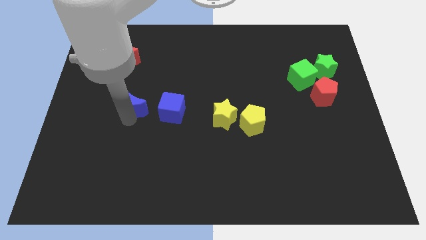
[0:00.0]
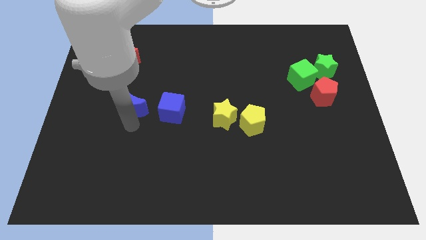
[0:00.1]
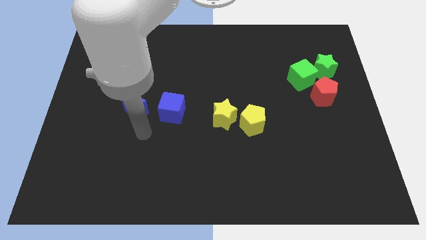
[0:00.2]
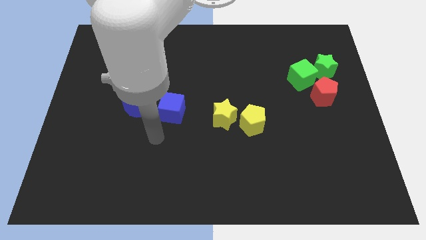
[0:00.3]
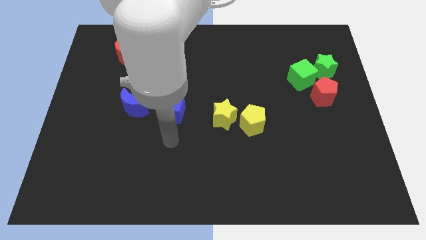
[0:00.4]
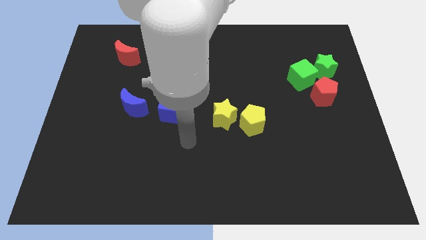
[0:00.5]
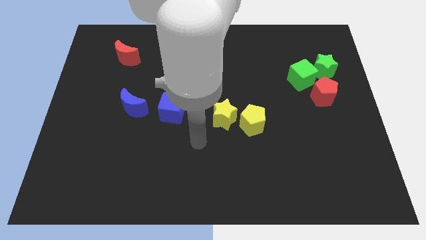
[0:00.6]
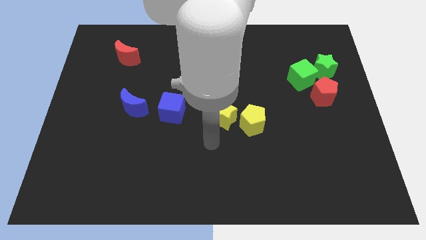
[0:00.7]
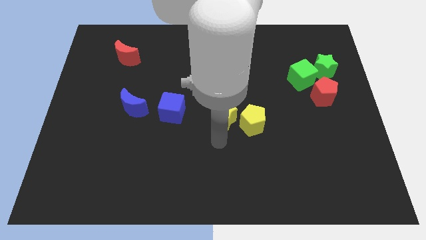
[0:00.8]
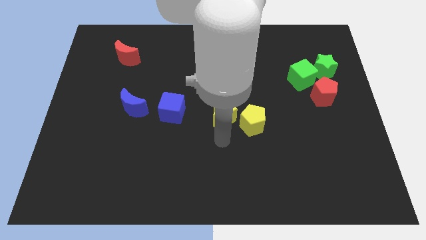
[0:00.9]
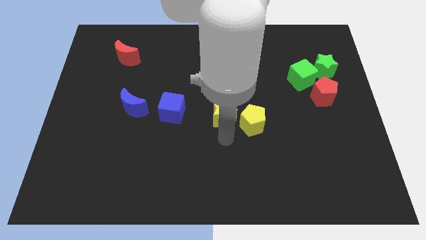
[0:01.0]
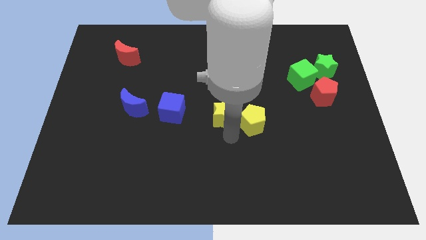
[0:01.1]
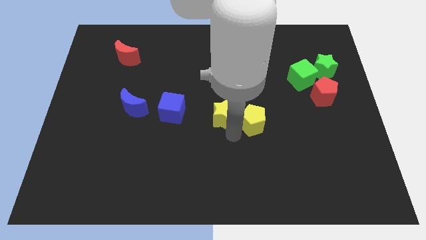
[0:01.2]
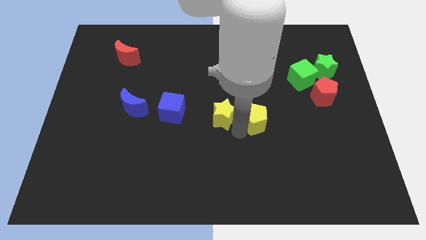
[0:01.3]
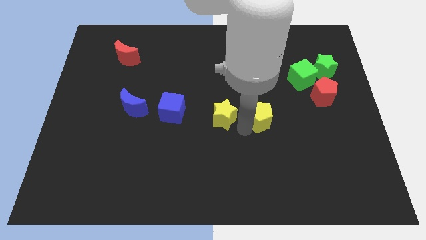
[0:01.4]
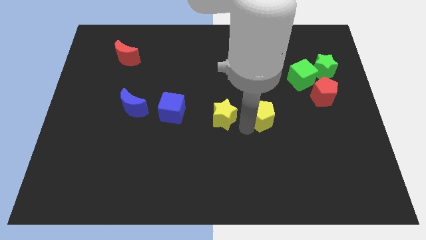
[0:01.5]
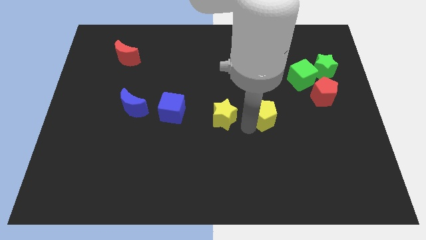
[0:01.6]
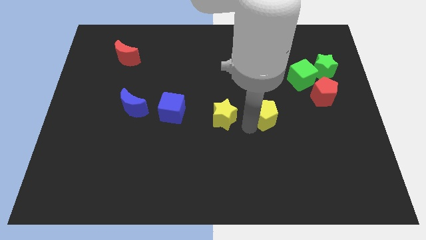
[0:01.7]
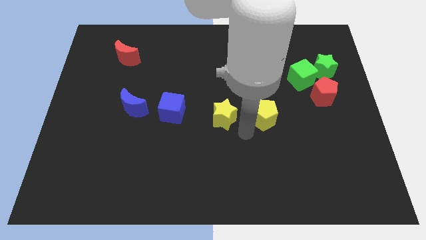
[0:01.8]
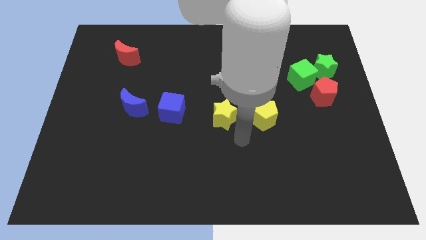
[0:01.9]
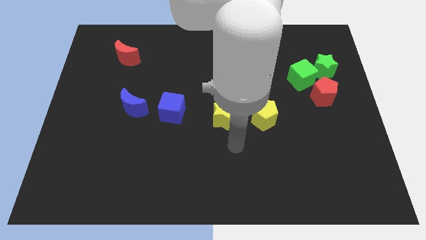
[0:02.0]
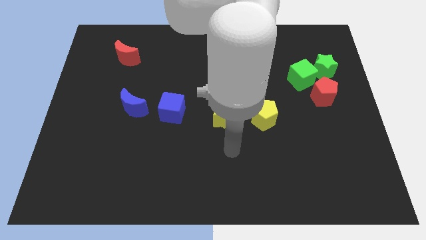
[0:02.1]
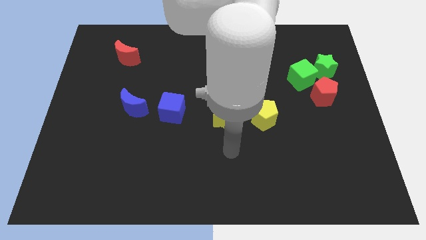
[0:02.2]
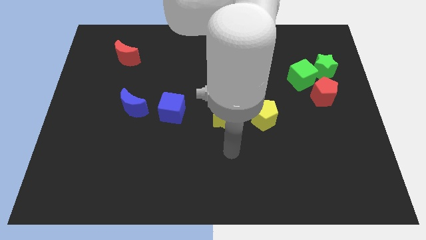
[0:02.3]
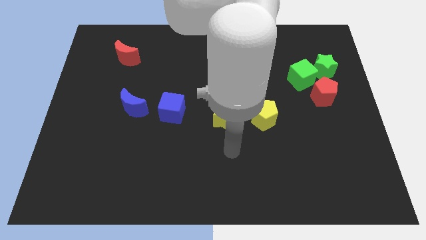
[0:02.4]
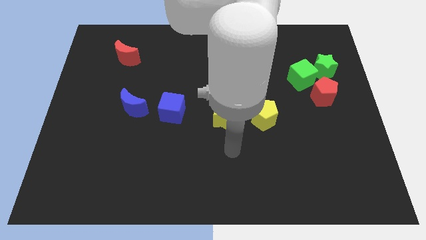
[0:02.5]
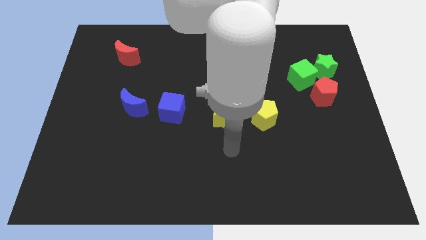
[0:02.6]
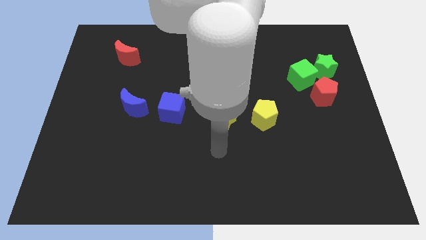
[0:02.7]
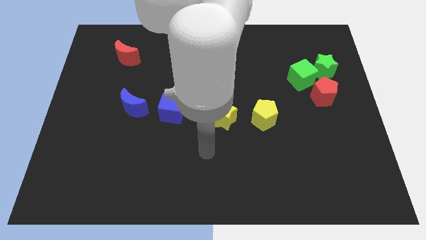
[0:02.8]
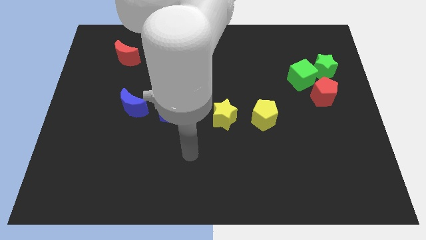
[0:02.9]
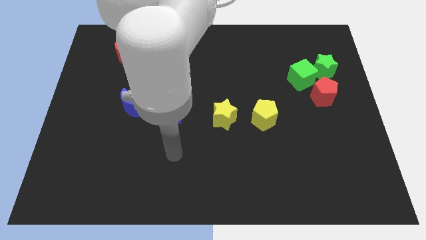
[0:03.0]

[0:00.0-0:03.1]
push the yellow pentagon away from the yellow star

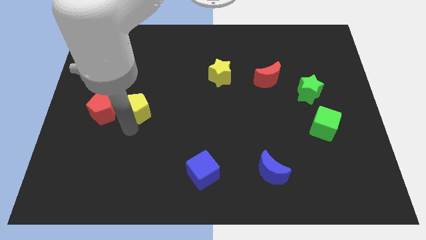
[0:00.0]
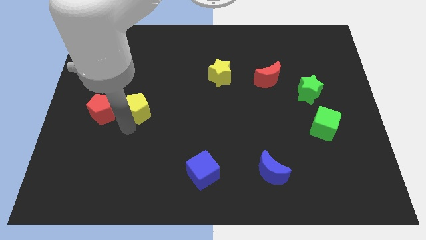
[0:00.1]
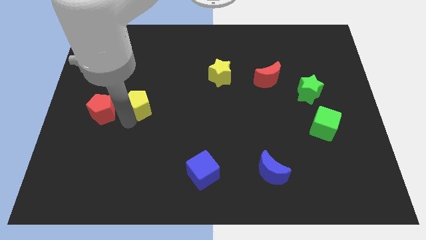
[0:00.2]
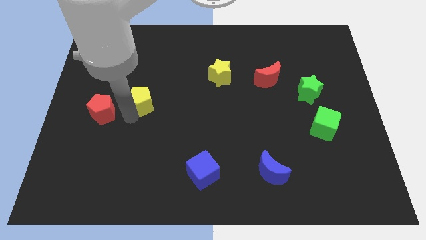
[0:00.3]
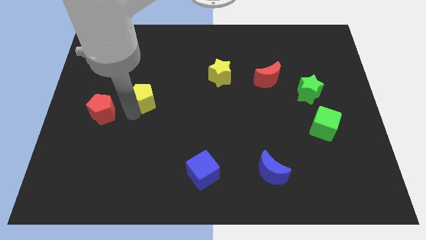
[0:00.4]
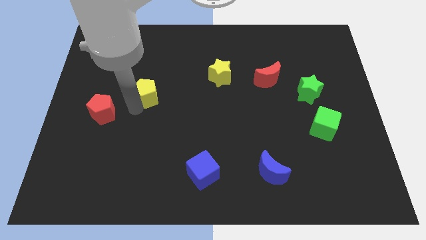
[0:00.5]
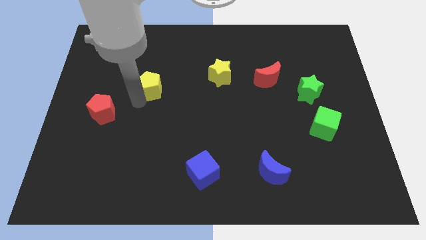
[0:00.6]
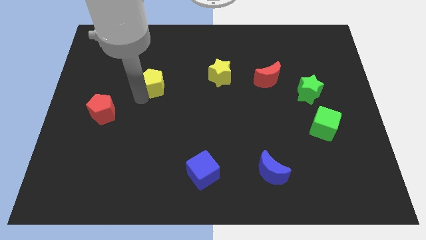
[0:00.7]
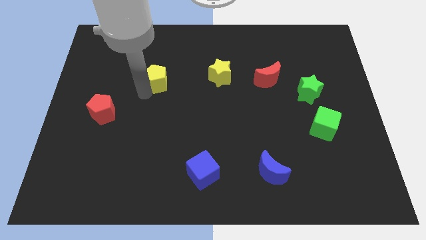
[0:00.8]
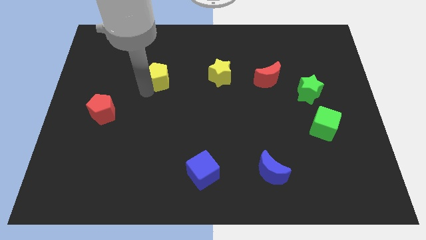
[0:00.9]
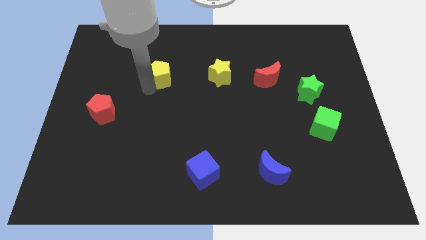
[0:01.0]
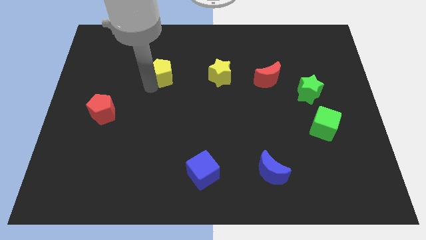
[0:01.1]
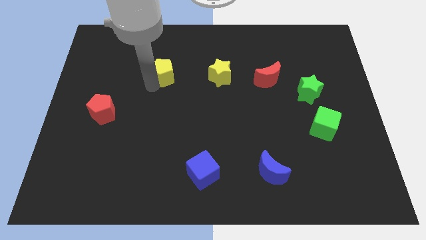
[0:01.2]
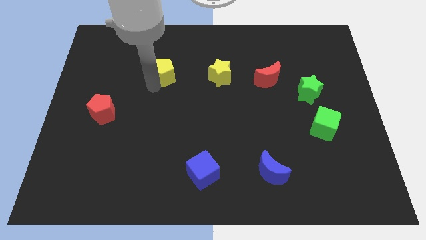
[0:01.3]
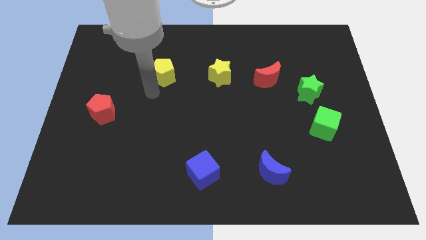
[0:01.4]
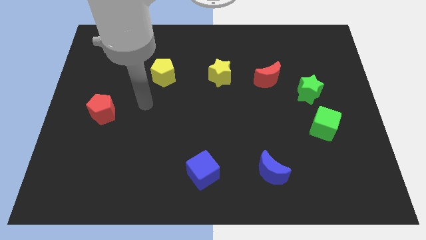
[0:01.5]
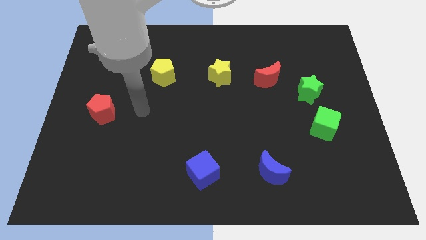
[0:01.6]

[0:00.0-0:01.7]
place the yellow pentagon diagonal to the blue crescent

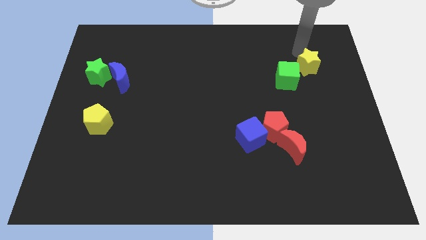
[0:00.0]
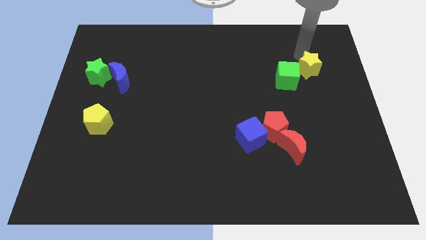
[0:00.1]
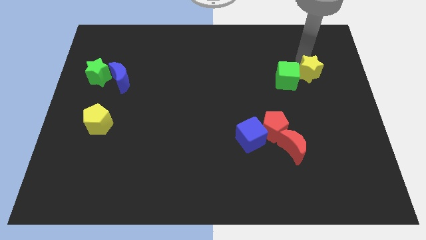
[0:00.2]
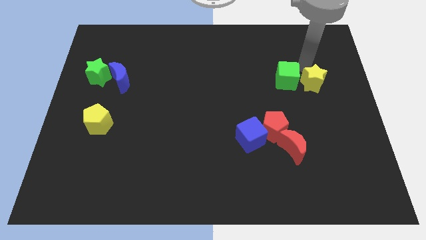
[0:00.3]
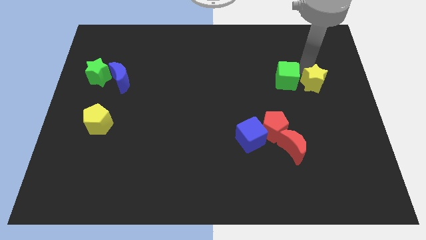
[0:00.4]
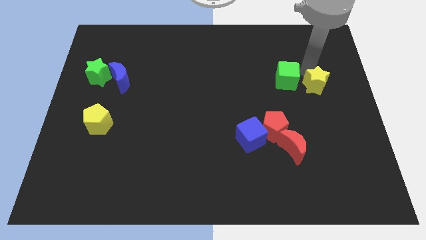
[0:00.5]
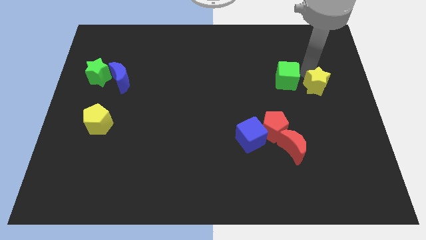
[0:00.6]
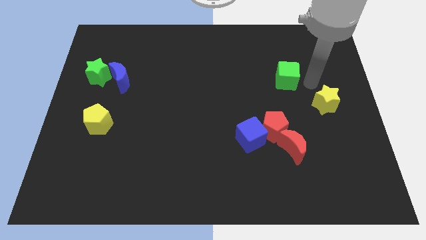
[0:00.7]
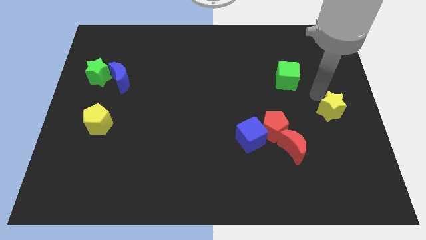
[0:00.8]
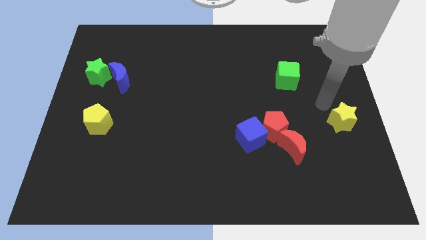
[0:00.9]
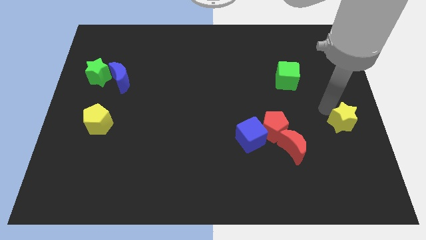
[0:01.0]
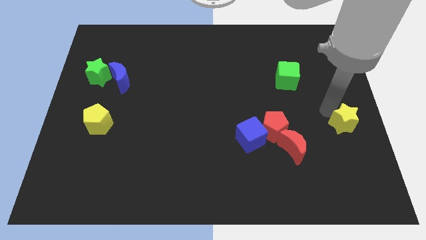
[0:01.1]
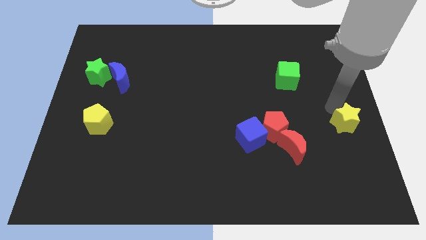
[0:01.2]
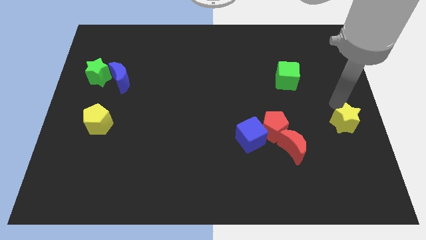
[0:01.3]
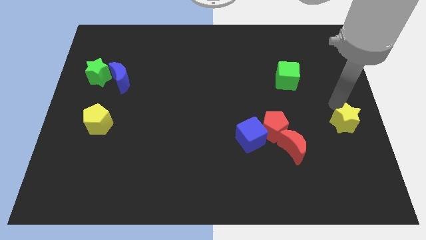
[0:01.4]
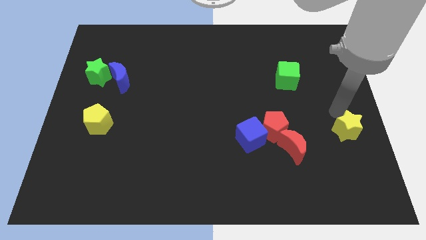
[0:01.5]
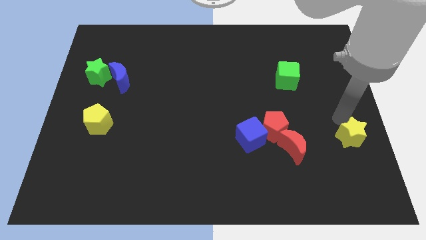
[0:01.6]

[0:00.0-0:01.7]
push the yellow star right side of red crescent

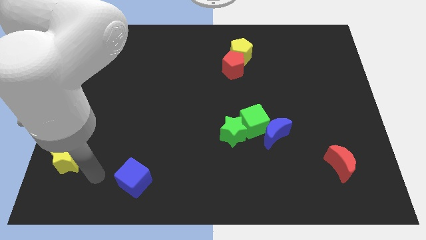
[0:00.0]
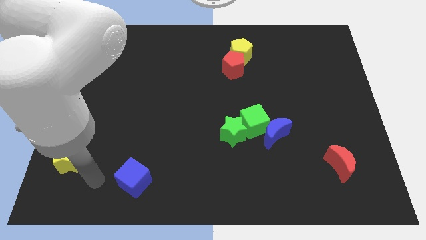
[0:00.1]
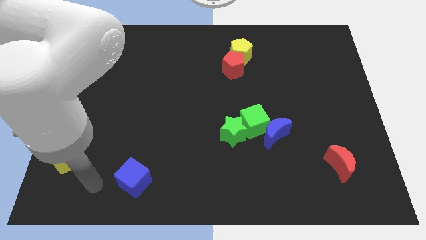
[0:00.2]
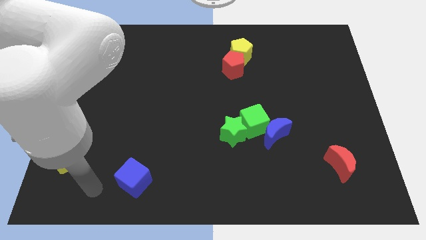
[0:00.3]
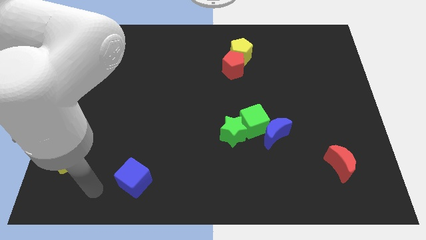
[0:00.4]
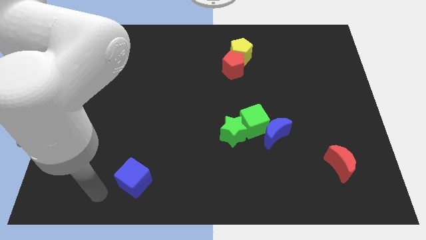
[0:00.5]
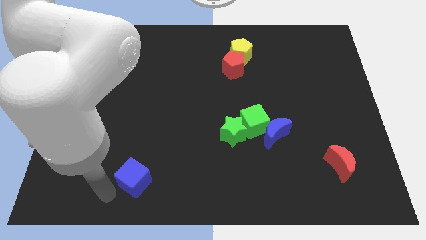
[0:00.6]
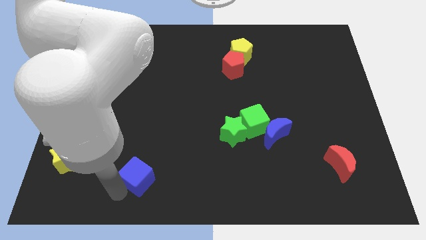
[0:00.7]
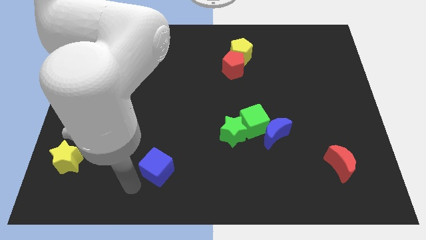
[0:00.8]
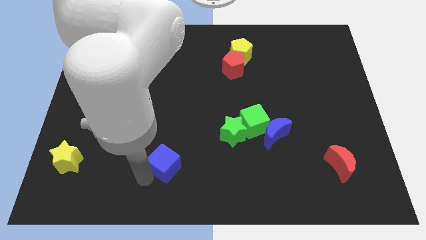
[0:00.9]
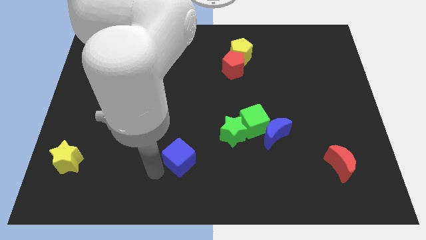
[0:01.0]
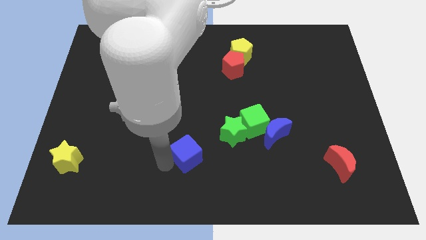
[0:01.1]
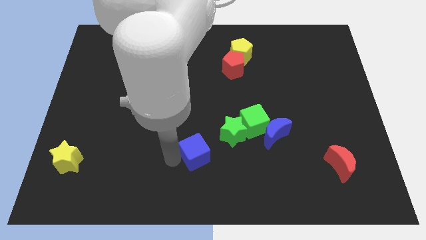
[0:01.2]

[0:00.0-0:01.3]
push the blue cube towards the green star

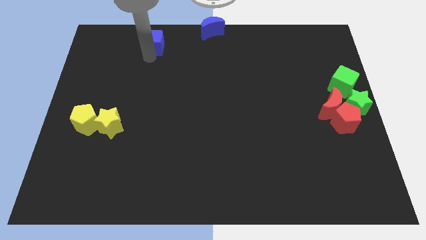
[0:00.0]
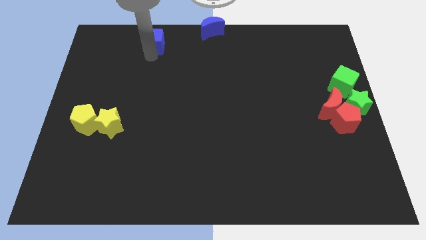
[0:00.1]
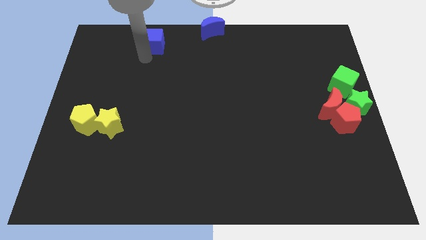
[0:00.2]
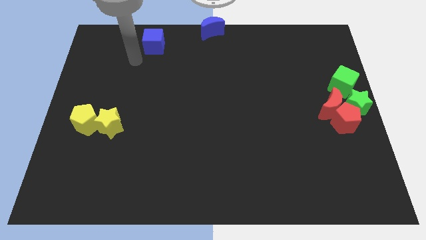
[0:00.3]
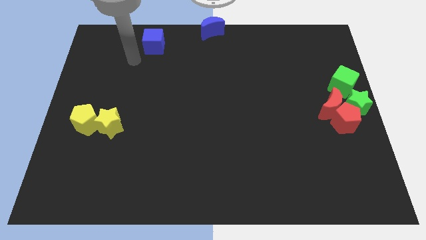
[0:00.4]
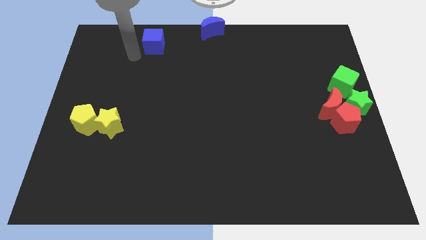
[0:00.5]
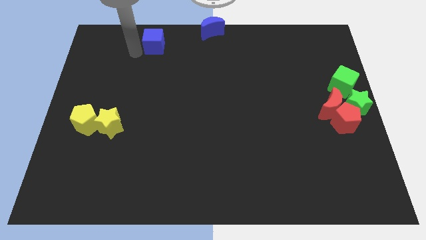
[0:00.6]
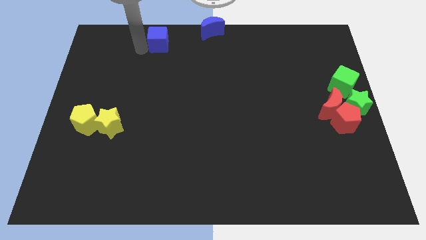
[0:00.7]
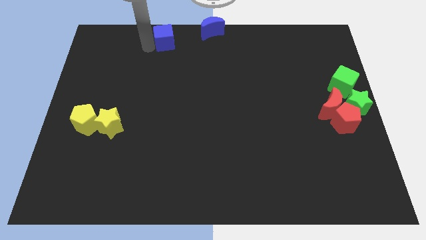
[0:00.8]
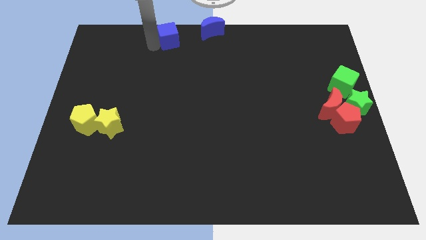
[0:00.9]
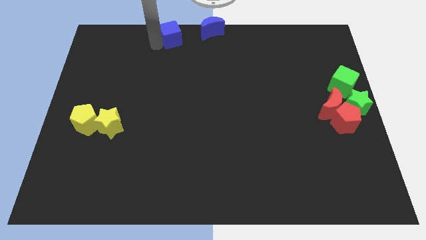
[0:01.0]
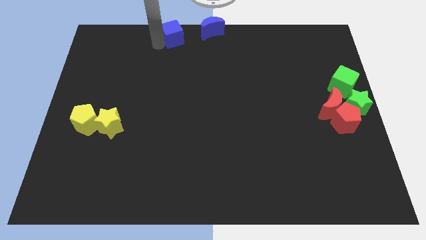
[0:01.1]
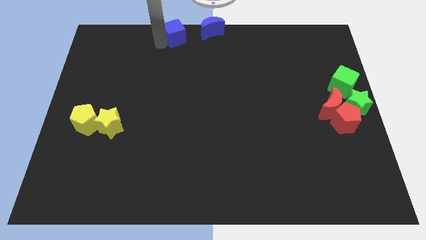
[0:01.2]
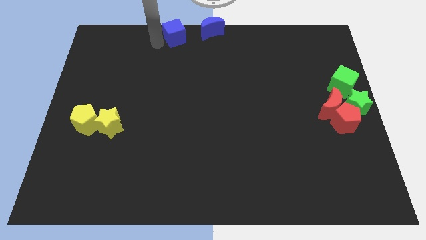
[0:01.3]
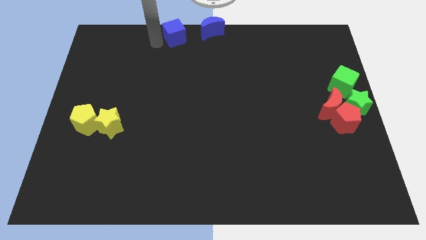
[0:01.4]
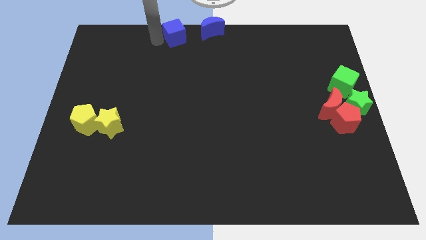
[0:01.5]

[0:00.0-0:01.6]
place blue cube to the left side of the blue moon
